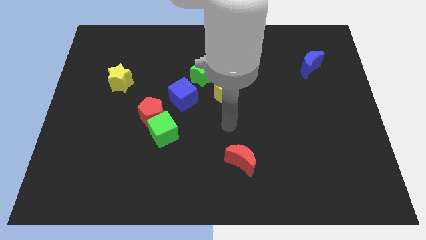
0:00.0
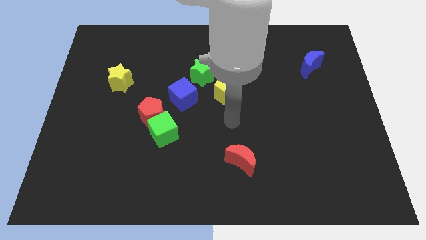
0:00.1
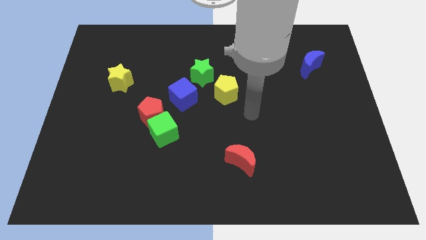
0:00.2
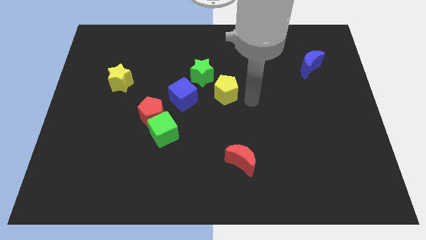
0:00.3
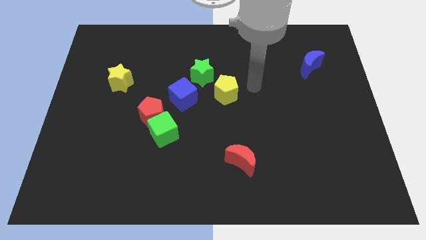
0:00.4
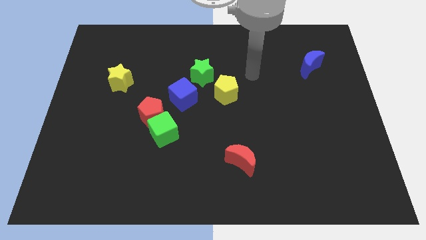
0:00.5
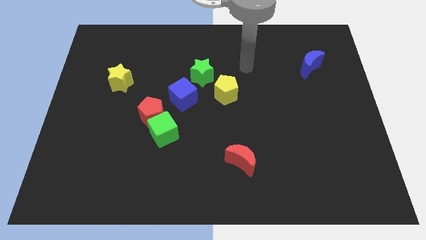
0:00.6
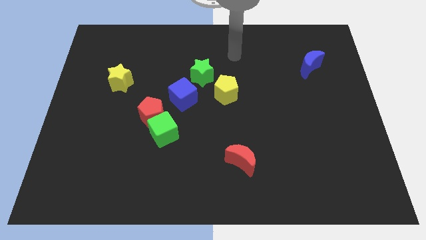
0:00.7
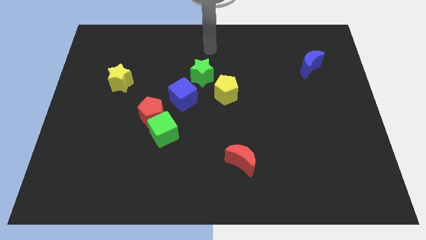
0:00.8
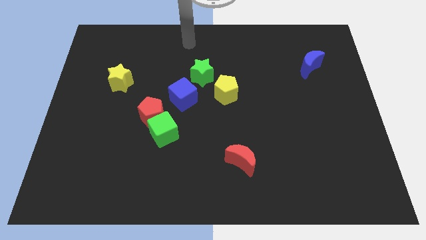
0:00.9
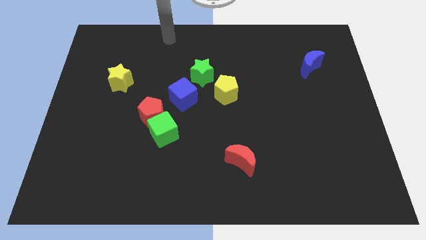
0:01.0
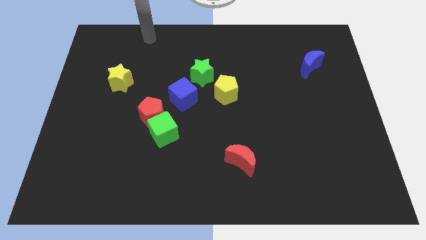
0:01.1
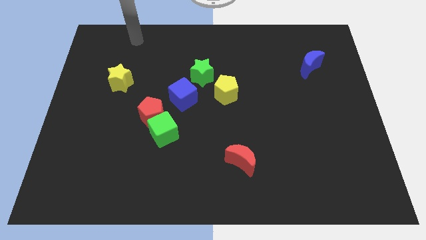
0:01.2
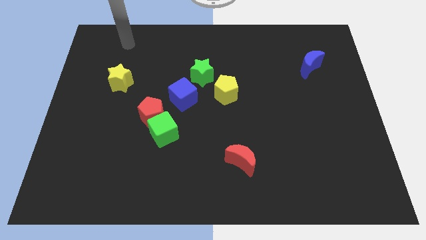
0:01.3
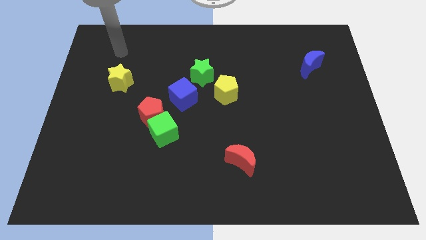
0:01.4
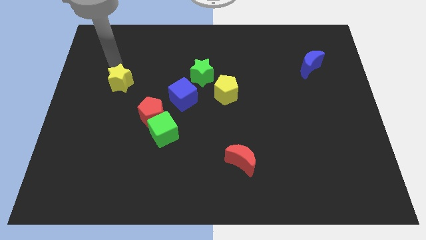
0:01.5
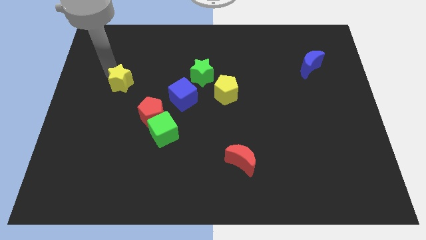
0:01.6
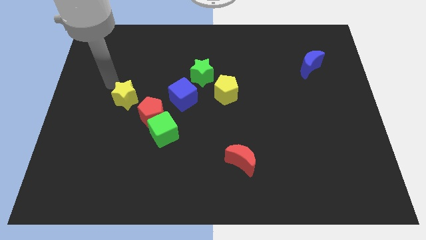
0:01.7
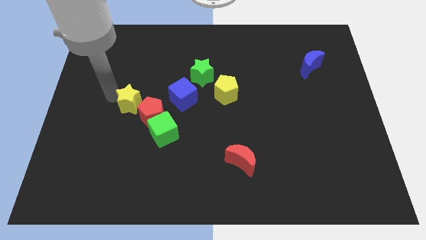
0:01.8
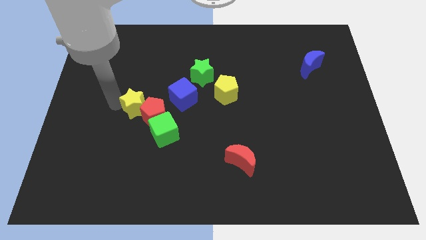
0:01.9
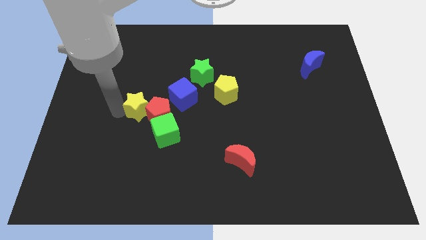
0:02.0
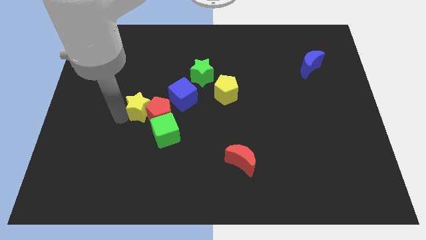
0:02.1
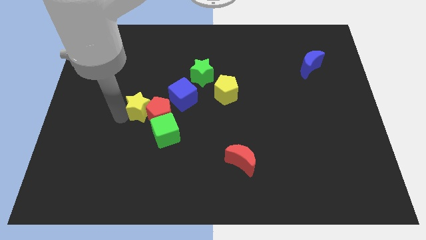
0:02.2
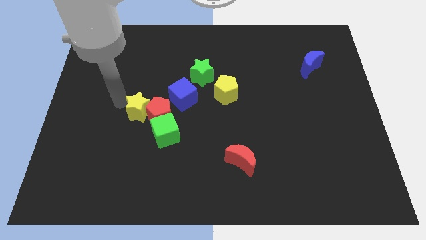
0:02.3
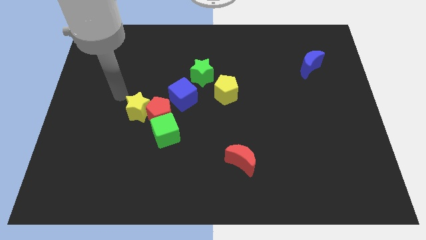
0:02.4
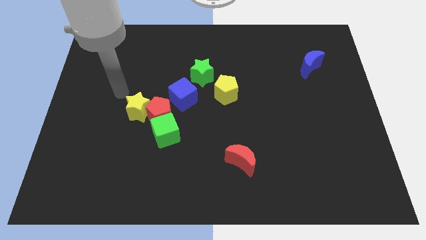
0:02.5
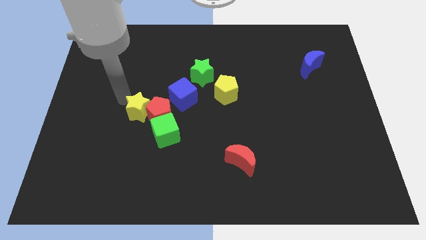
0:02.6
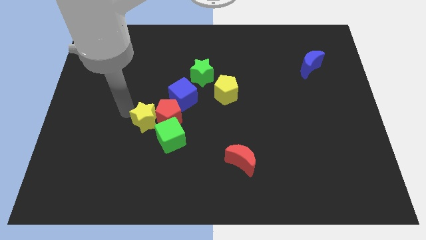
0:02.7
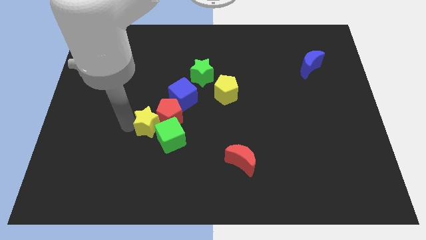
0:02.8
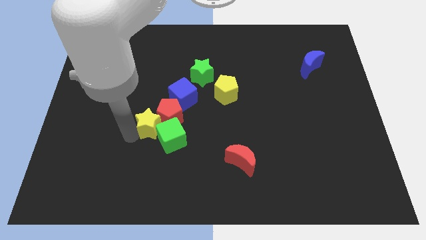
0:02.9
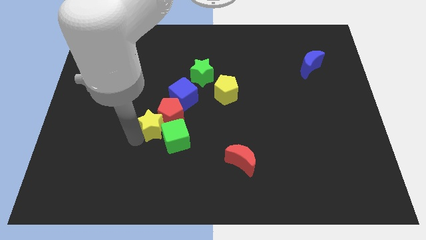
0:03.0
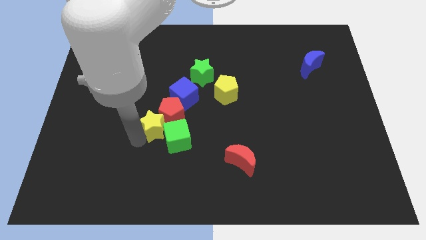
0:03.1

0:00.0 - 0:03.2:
slide the yellow star next to the green cube

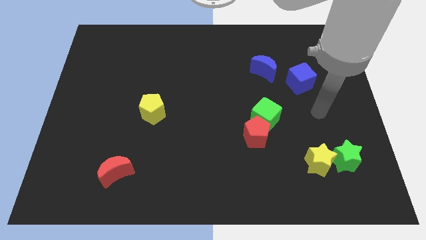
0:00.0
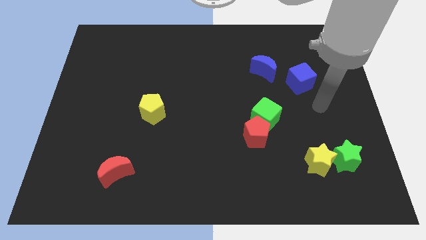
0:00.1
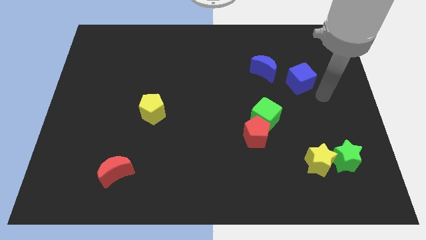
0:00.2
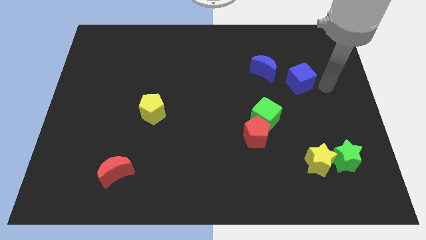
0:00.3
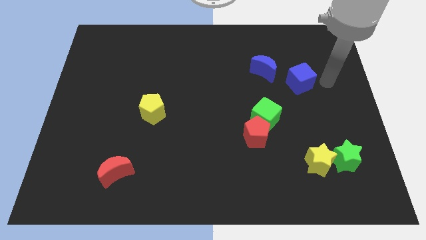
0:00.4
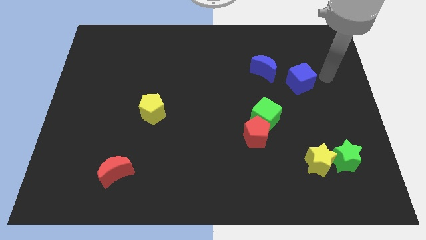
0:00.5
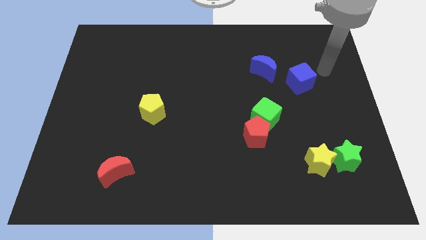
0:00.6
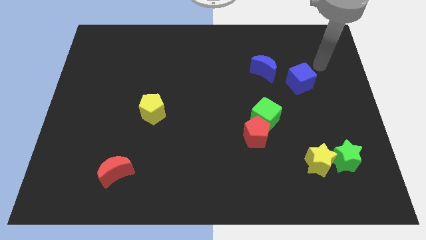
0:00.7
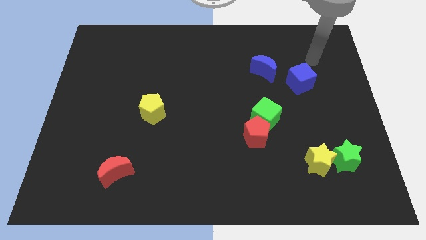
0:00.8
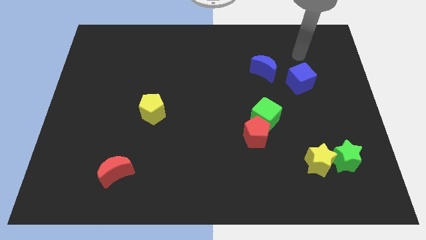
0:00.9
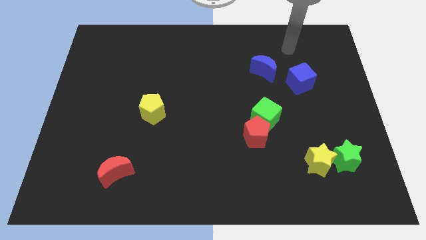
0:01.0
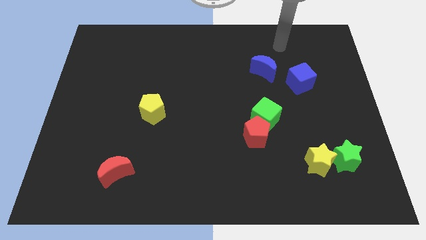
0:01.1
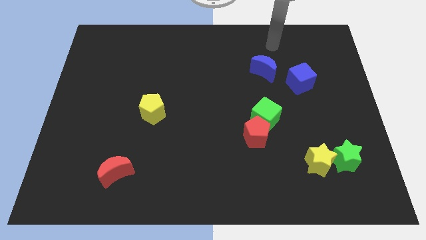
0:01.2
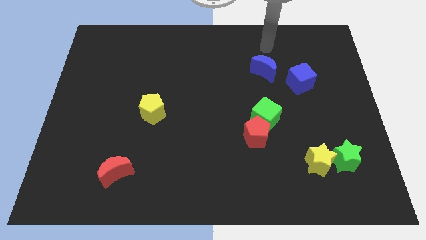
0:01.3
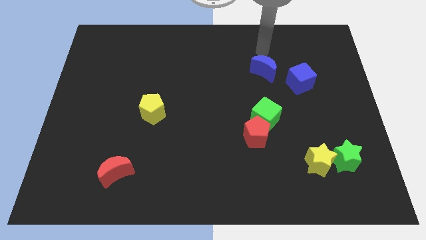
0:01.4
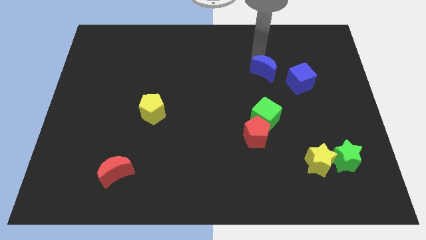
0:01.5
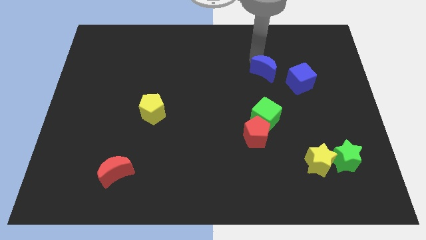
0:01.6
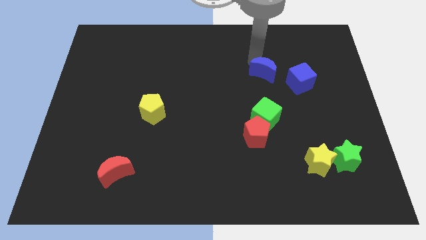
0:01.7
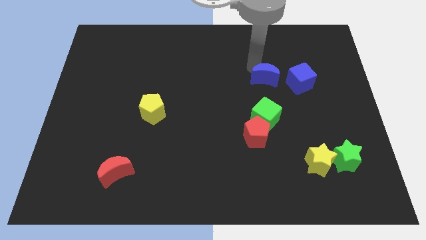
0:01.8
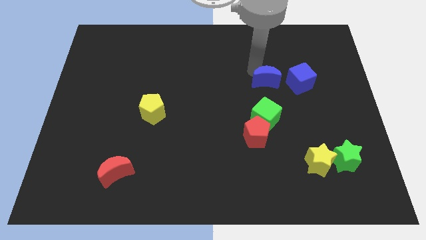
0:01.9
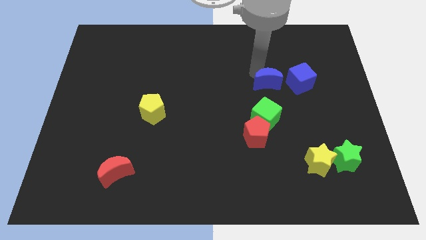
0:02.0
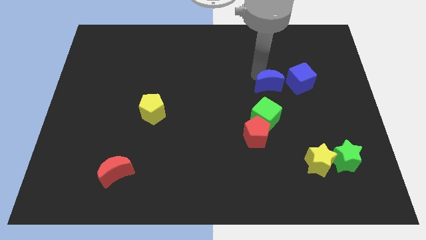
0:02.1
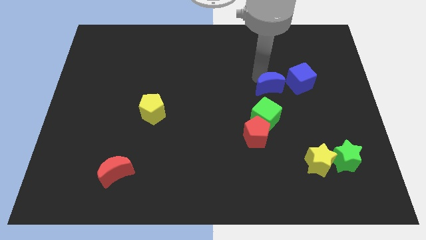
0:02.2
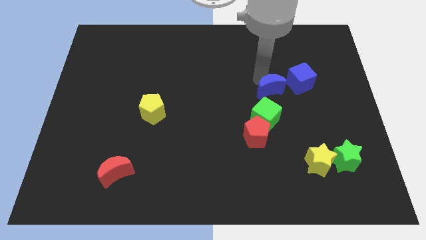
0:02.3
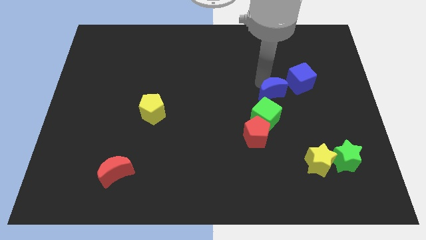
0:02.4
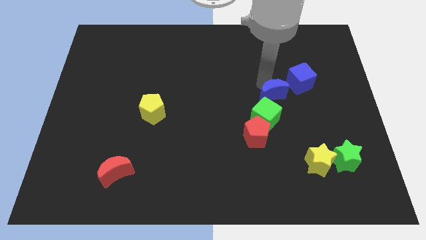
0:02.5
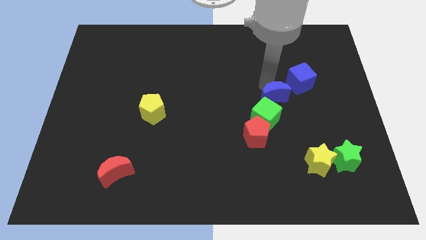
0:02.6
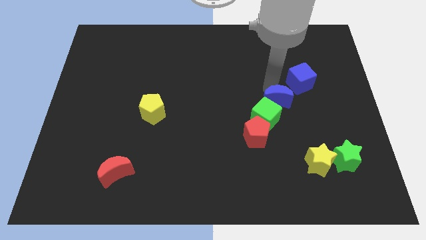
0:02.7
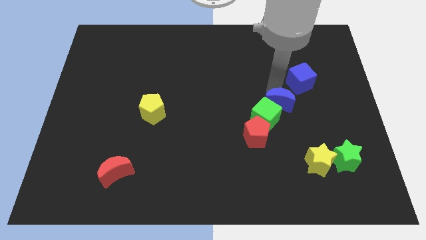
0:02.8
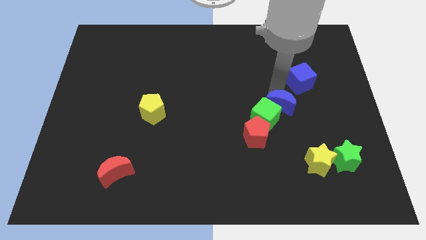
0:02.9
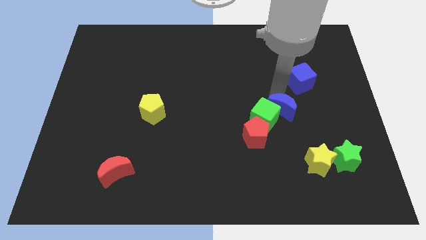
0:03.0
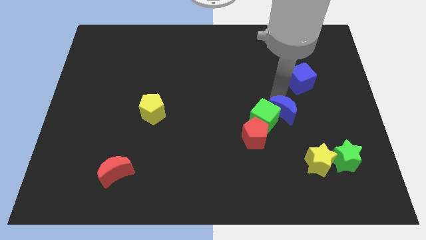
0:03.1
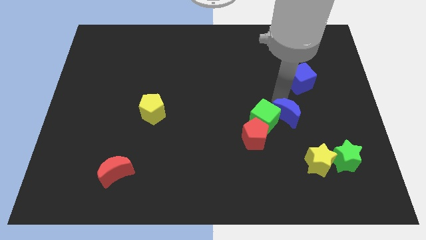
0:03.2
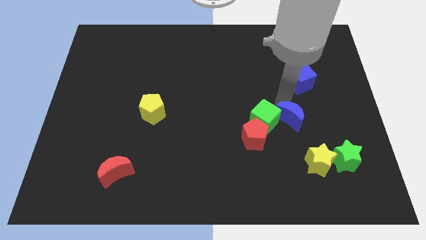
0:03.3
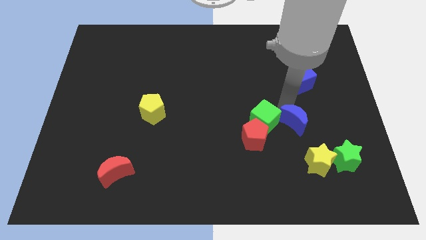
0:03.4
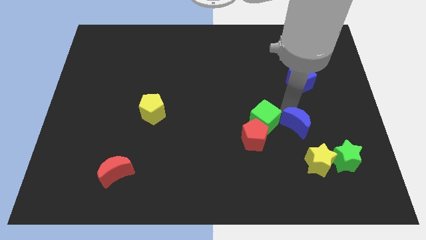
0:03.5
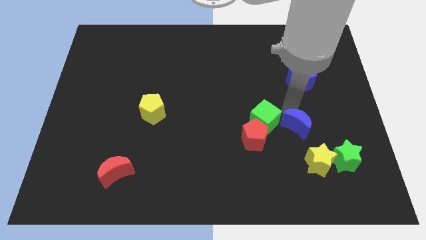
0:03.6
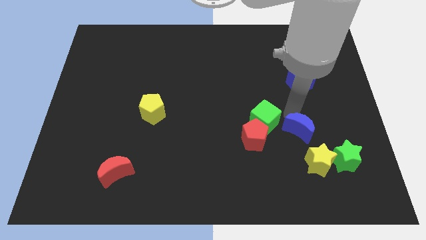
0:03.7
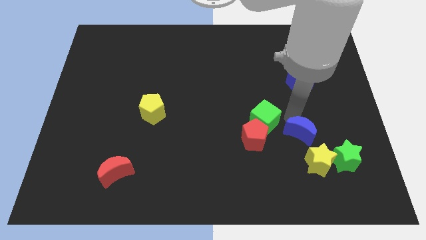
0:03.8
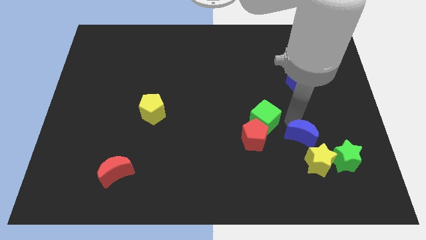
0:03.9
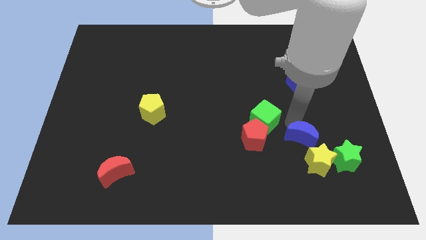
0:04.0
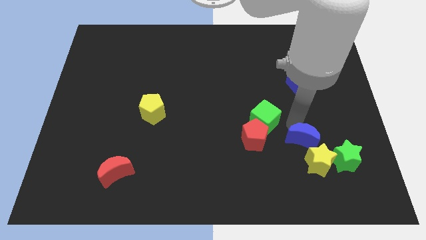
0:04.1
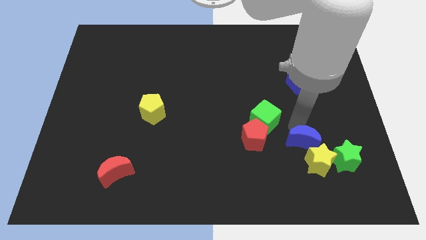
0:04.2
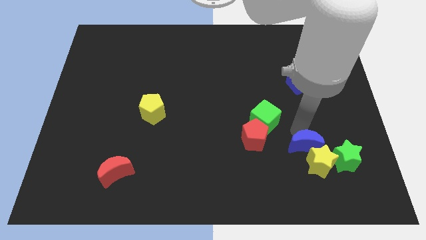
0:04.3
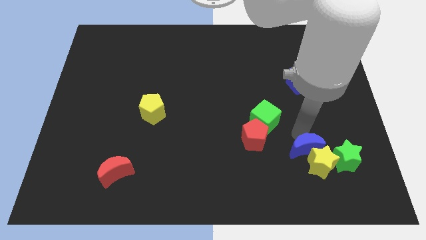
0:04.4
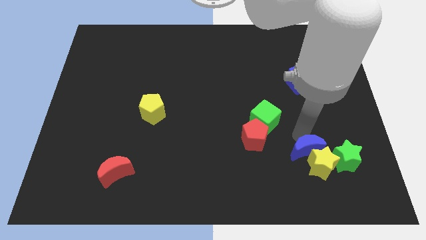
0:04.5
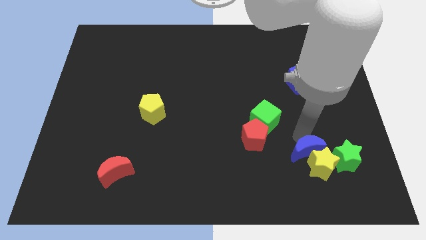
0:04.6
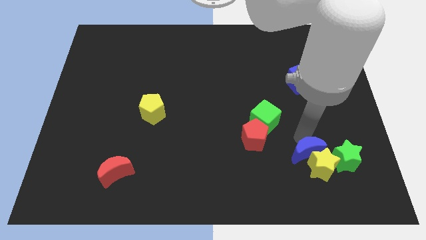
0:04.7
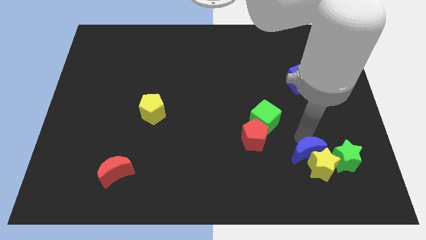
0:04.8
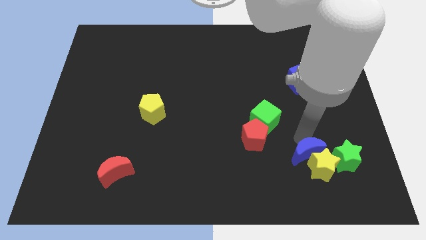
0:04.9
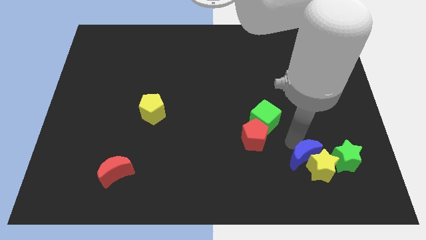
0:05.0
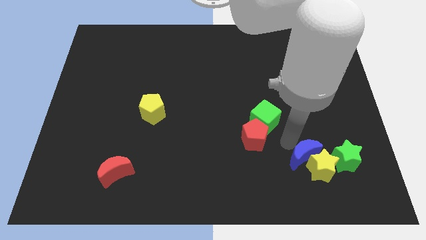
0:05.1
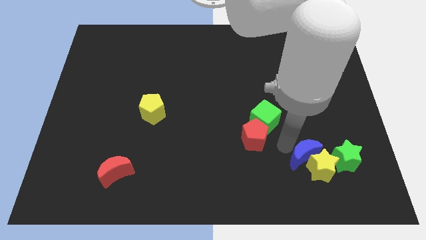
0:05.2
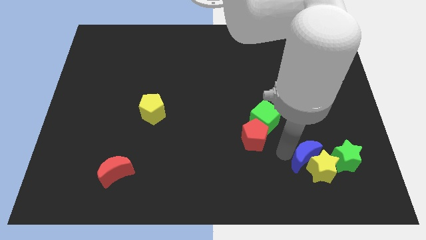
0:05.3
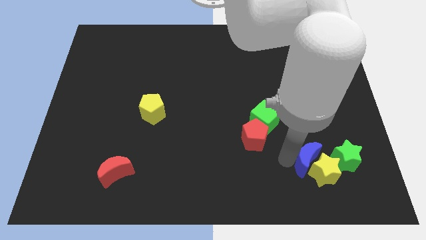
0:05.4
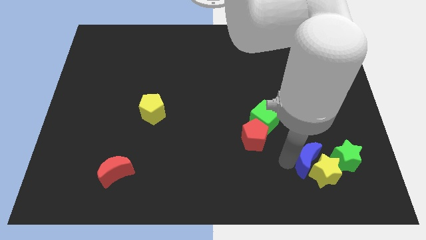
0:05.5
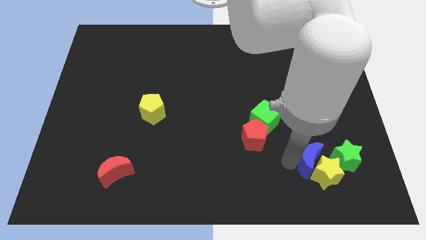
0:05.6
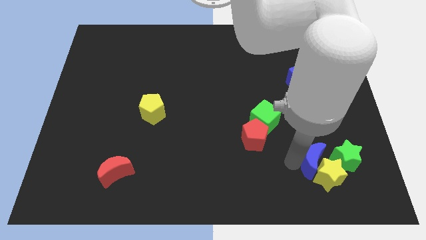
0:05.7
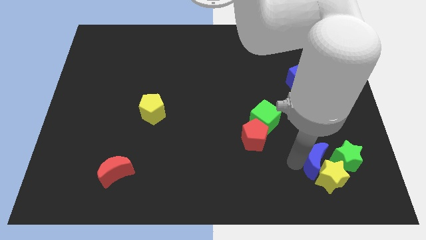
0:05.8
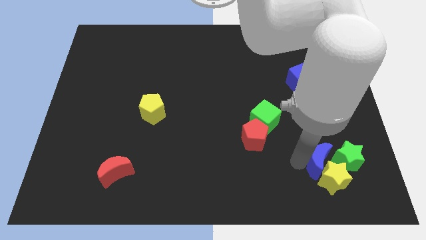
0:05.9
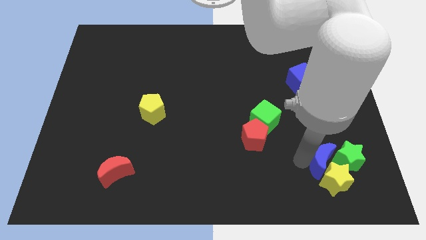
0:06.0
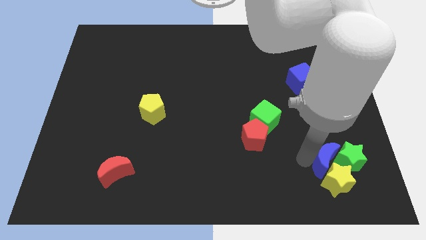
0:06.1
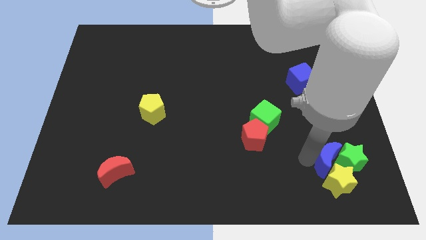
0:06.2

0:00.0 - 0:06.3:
move the blue moon next to the green star
